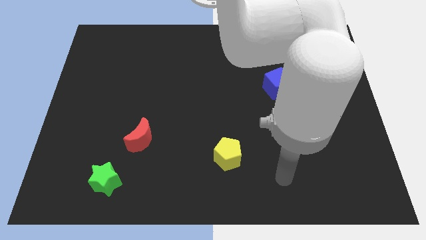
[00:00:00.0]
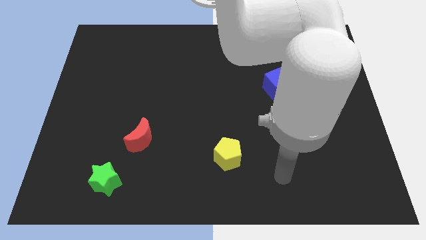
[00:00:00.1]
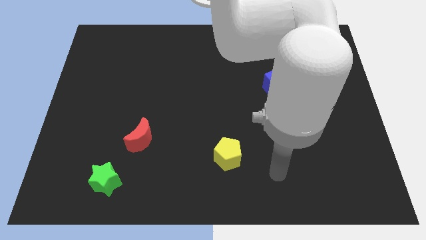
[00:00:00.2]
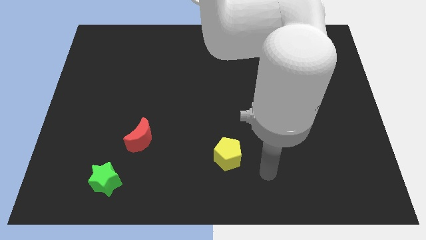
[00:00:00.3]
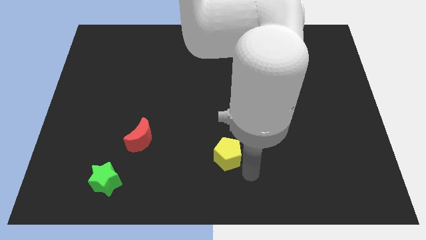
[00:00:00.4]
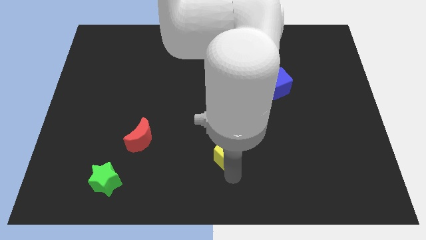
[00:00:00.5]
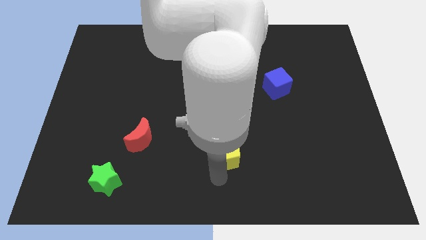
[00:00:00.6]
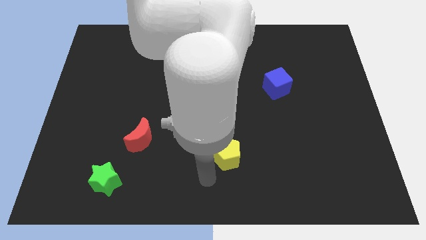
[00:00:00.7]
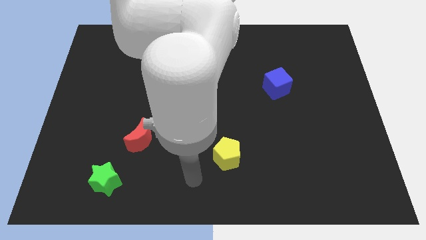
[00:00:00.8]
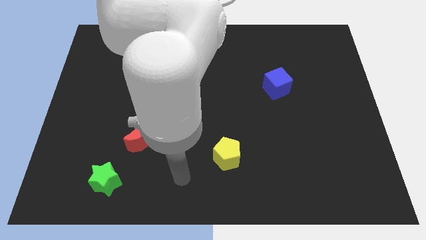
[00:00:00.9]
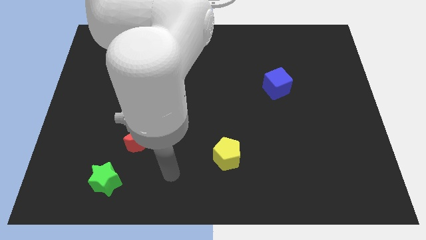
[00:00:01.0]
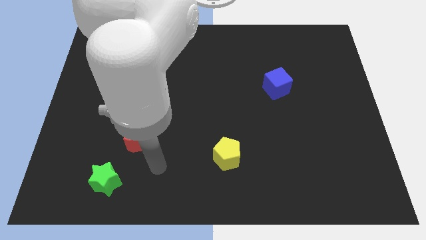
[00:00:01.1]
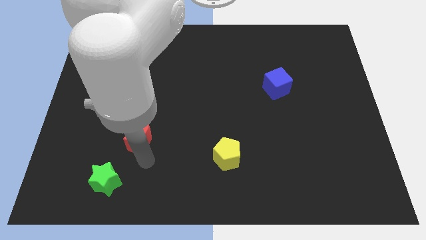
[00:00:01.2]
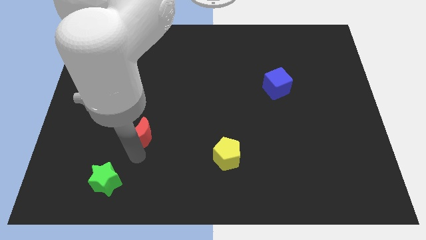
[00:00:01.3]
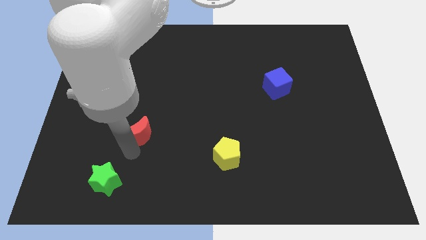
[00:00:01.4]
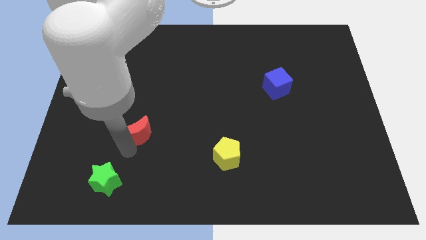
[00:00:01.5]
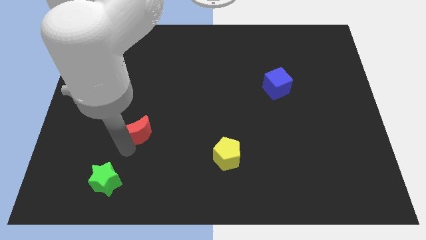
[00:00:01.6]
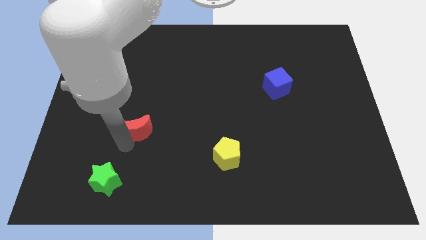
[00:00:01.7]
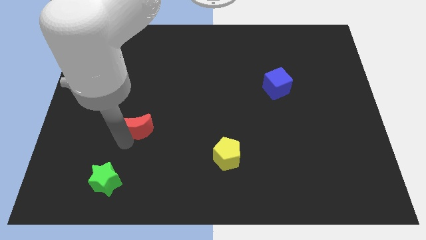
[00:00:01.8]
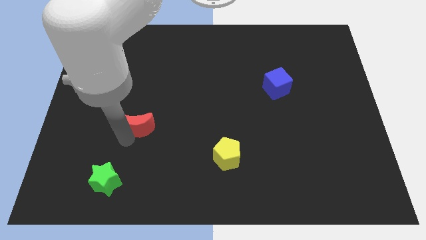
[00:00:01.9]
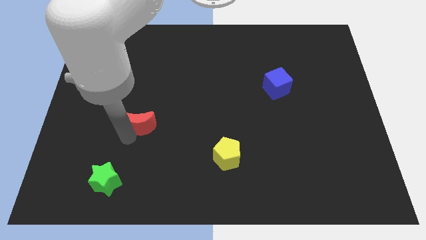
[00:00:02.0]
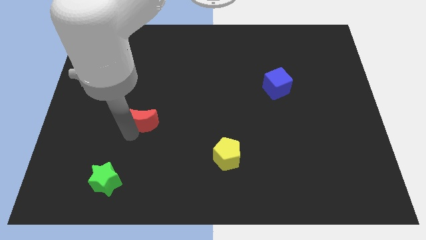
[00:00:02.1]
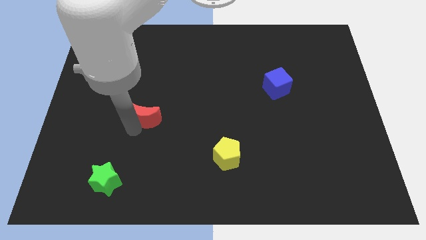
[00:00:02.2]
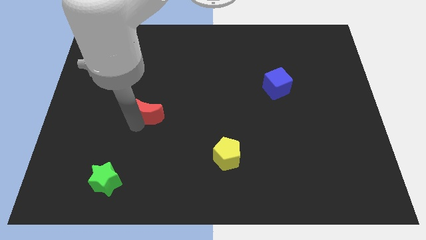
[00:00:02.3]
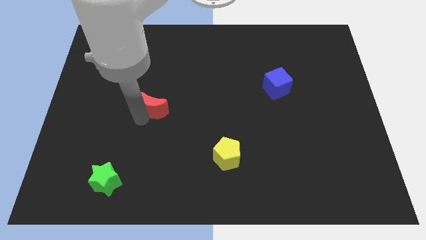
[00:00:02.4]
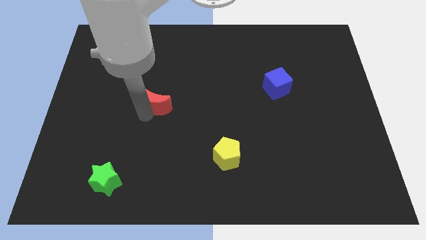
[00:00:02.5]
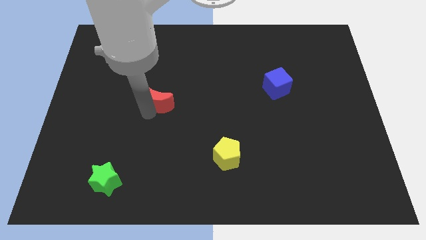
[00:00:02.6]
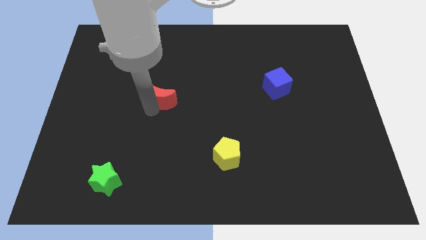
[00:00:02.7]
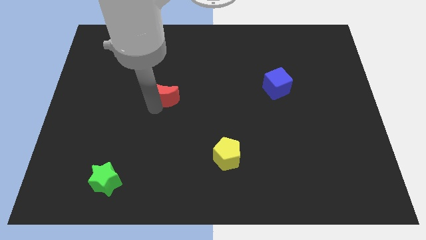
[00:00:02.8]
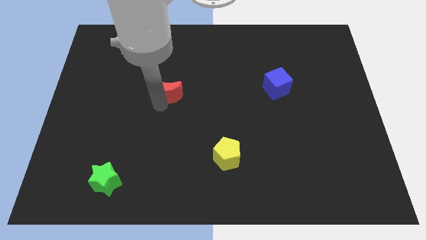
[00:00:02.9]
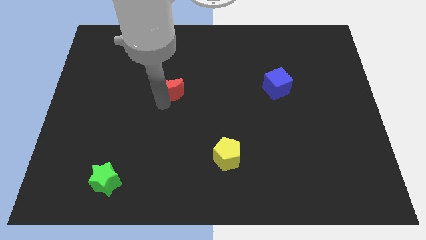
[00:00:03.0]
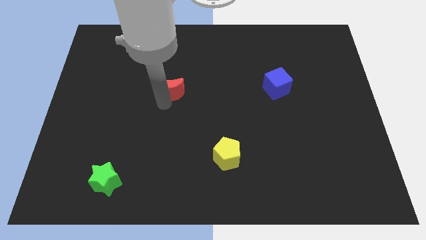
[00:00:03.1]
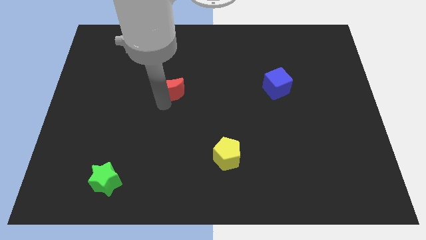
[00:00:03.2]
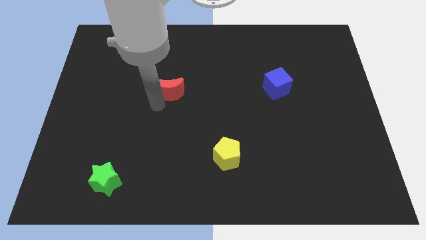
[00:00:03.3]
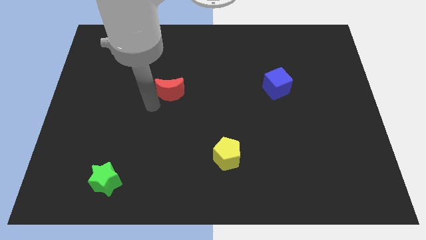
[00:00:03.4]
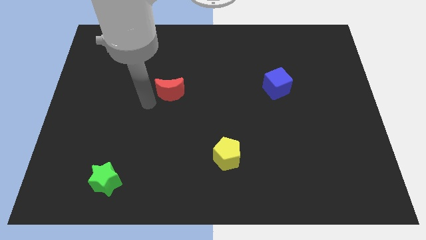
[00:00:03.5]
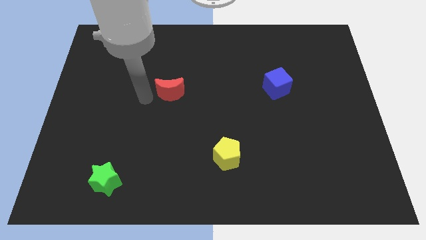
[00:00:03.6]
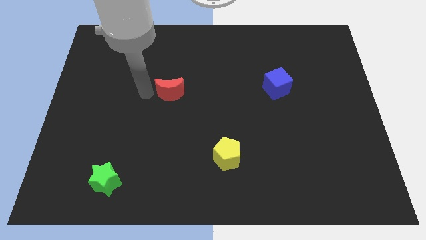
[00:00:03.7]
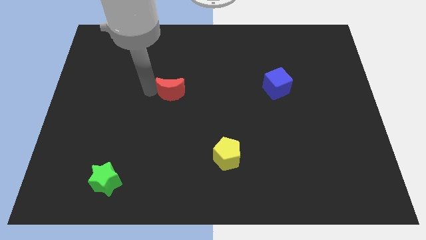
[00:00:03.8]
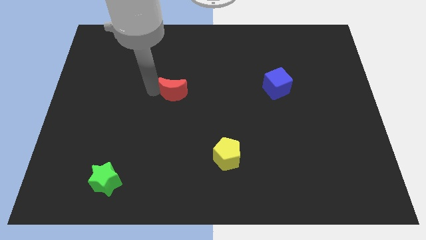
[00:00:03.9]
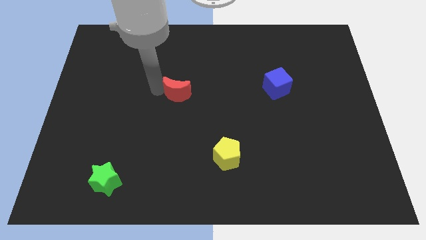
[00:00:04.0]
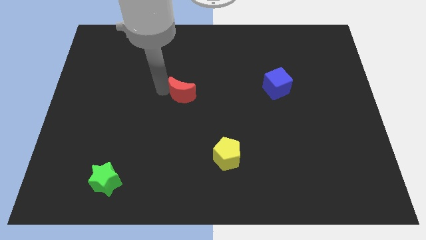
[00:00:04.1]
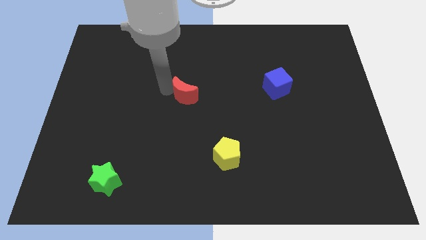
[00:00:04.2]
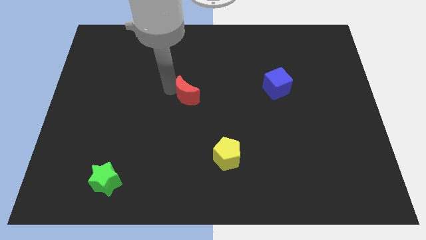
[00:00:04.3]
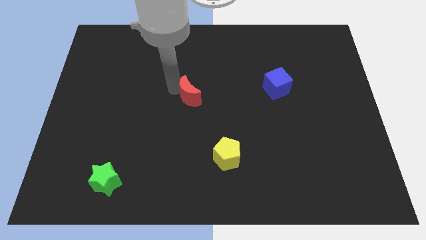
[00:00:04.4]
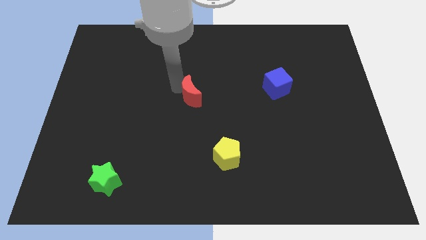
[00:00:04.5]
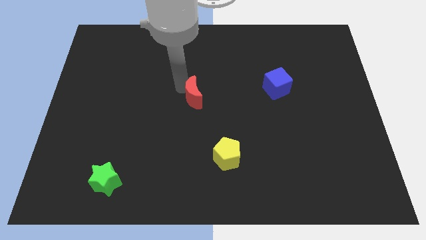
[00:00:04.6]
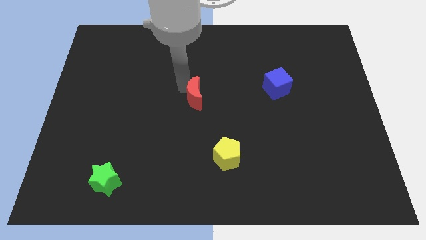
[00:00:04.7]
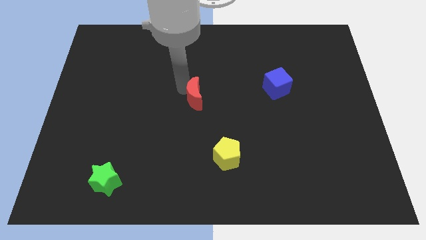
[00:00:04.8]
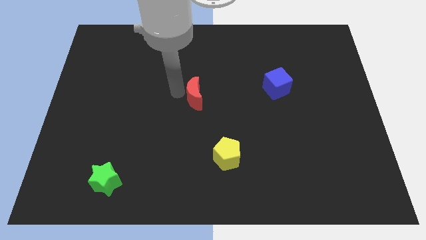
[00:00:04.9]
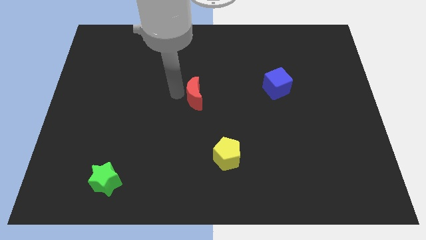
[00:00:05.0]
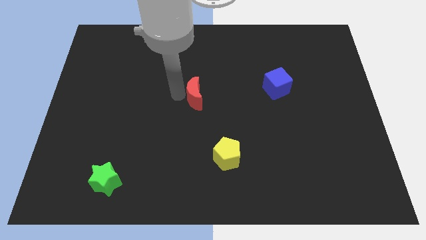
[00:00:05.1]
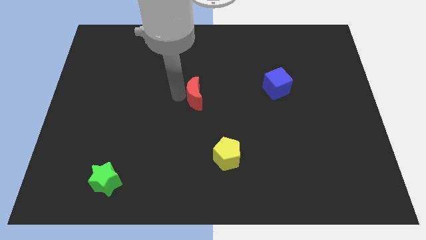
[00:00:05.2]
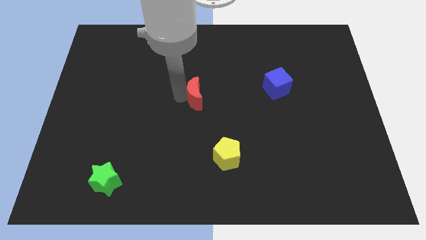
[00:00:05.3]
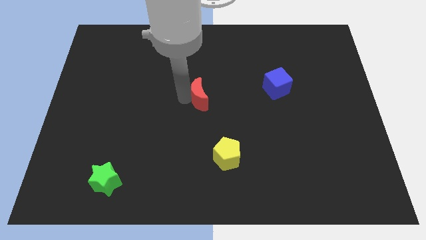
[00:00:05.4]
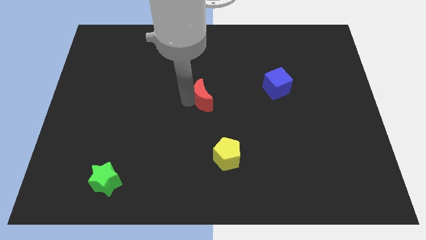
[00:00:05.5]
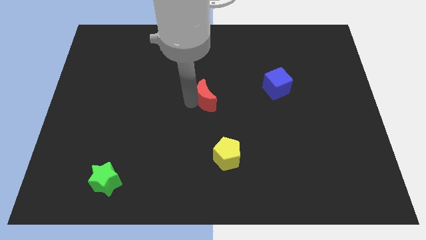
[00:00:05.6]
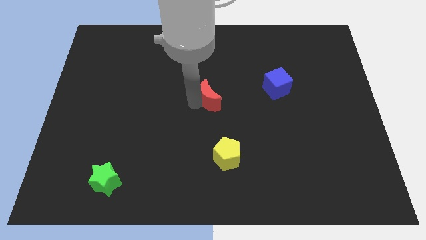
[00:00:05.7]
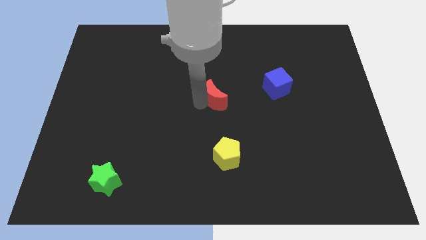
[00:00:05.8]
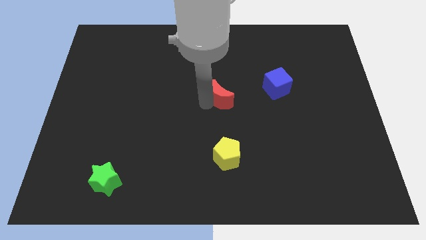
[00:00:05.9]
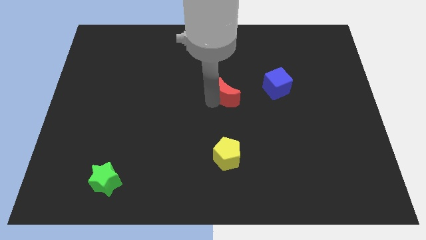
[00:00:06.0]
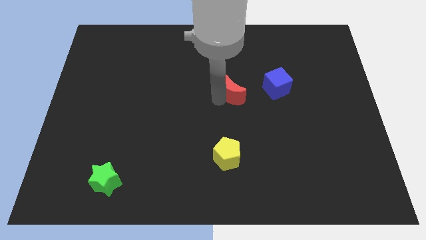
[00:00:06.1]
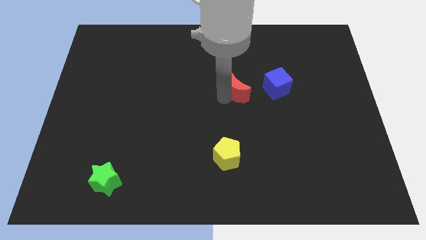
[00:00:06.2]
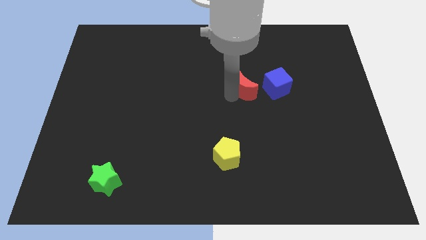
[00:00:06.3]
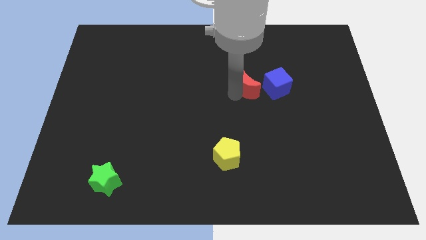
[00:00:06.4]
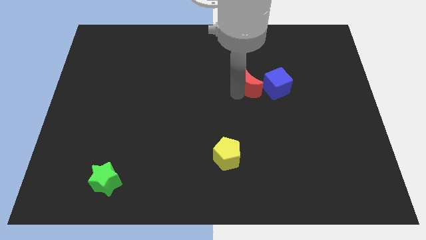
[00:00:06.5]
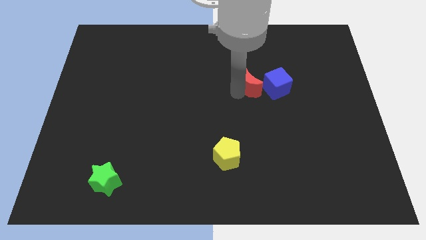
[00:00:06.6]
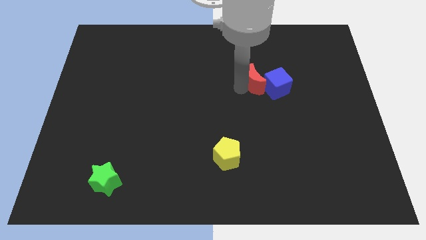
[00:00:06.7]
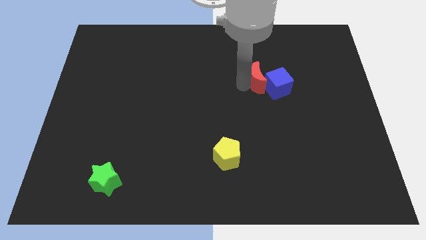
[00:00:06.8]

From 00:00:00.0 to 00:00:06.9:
push the red moon towards the blue block

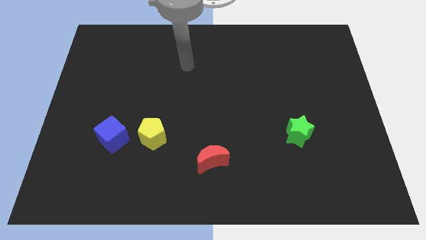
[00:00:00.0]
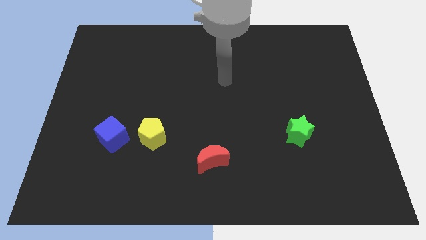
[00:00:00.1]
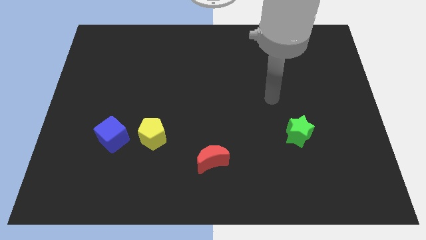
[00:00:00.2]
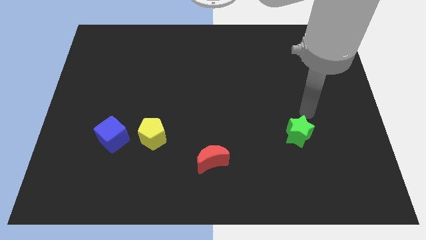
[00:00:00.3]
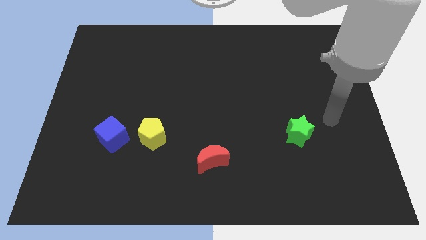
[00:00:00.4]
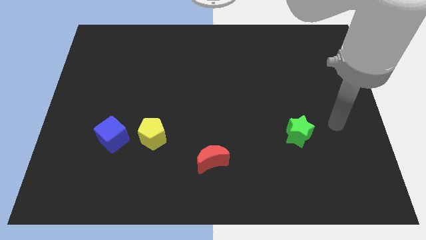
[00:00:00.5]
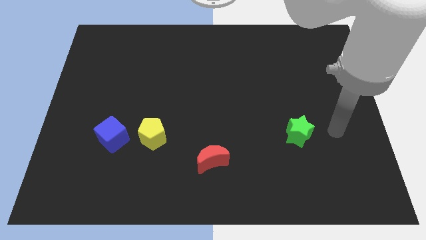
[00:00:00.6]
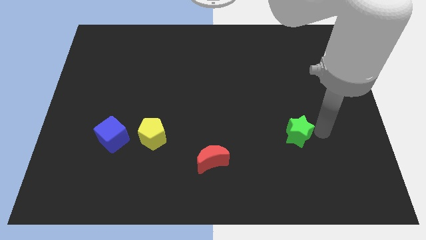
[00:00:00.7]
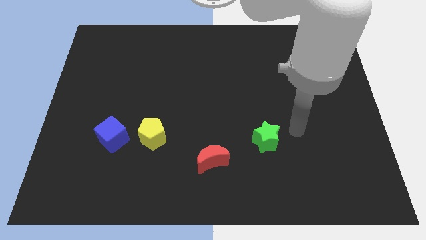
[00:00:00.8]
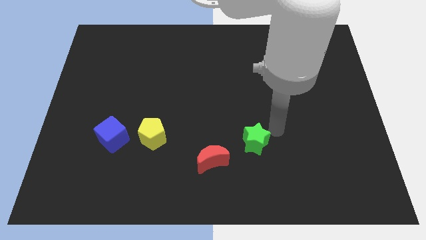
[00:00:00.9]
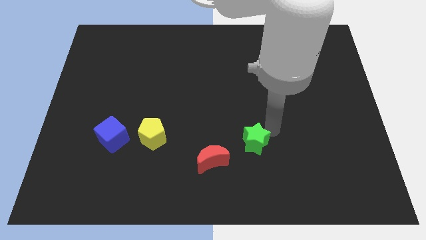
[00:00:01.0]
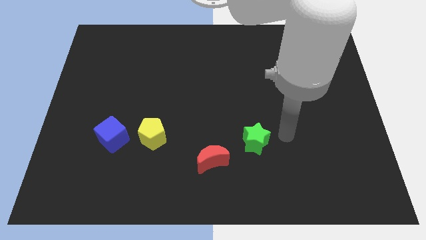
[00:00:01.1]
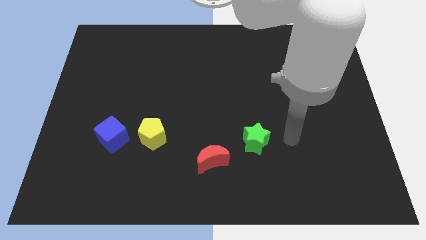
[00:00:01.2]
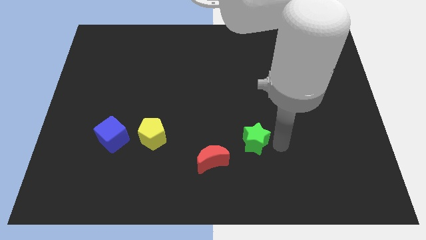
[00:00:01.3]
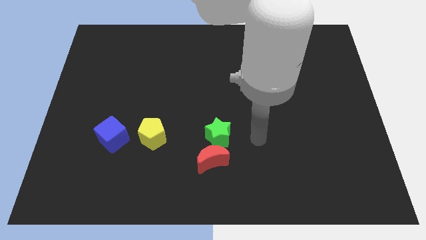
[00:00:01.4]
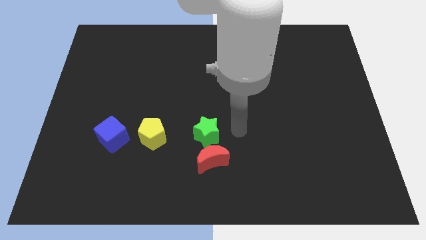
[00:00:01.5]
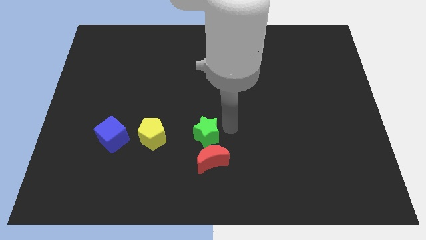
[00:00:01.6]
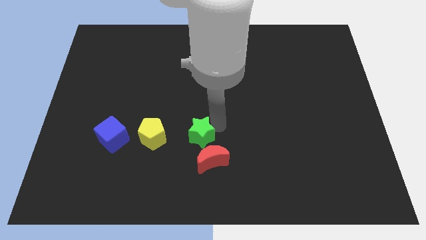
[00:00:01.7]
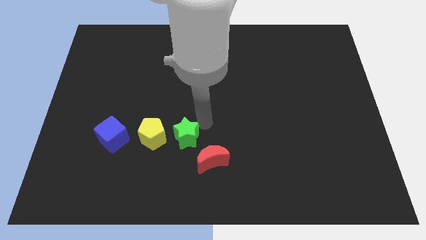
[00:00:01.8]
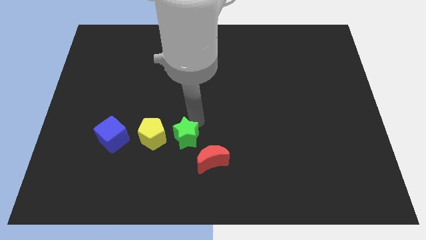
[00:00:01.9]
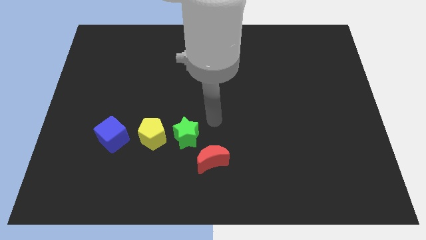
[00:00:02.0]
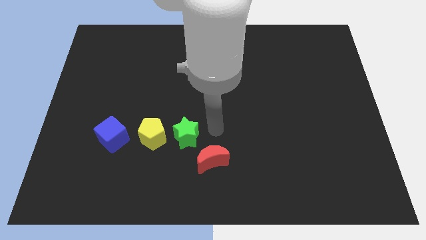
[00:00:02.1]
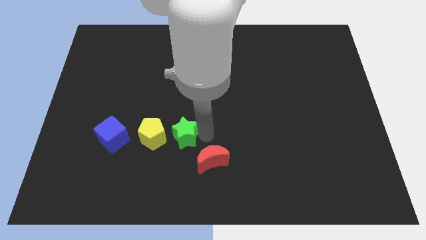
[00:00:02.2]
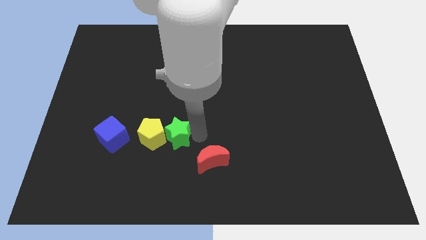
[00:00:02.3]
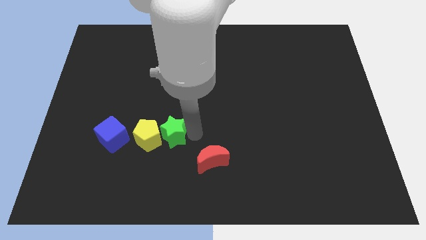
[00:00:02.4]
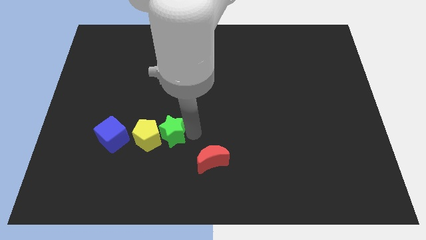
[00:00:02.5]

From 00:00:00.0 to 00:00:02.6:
push the green star to the yellow block
